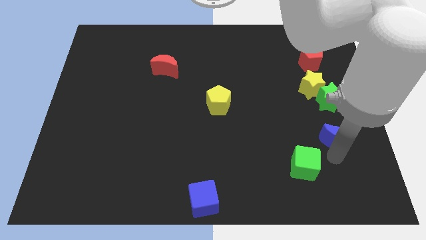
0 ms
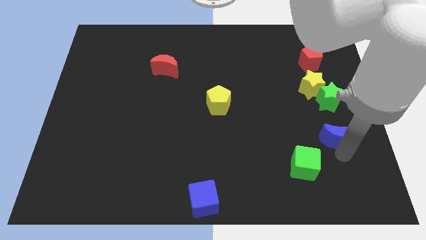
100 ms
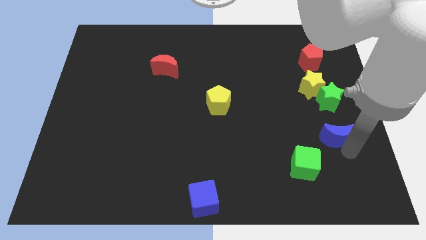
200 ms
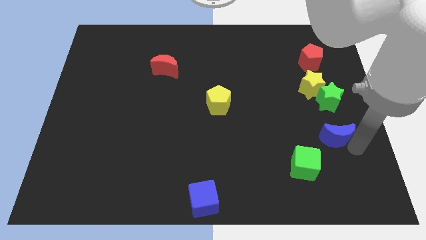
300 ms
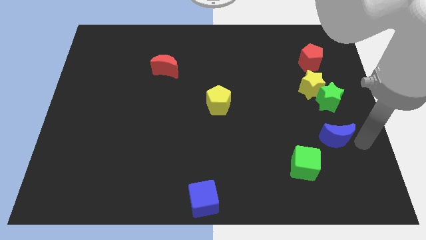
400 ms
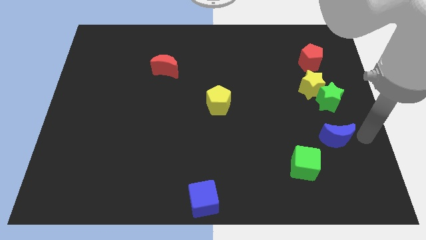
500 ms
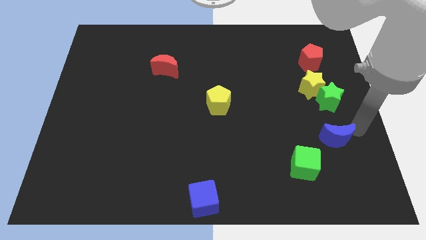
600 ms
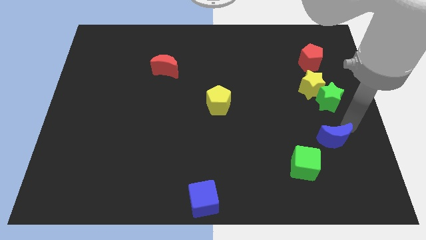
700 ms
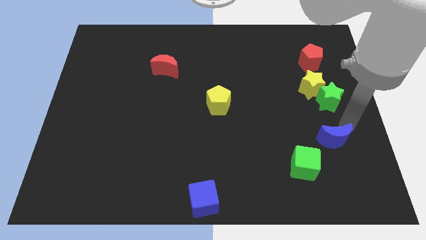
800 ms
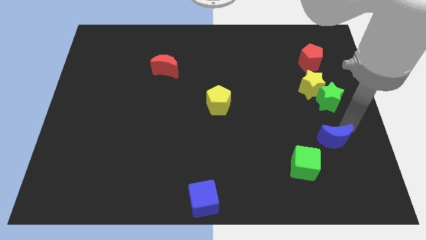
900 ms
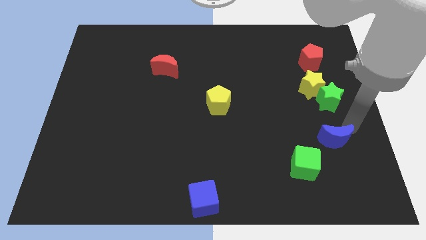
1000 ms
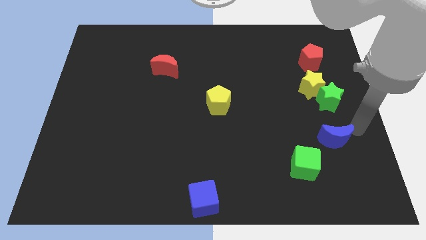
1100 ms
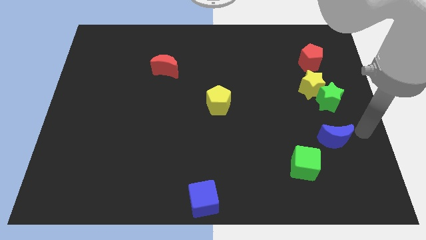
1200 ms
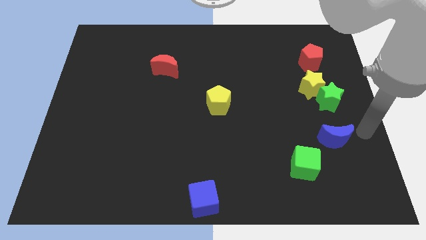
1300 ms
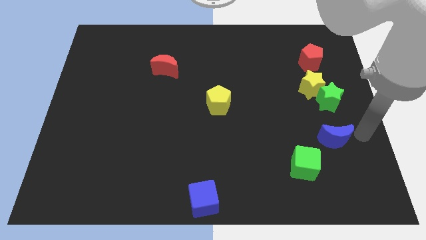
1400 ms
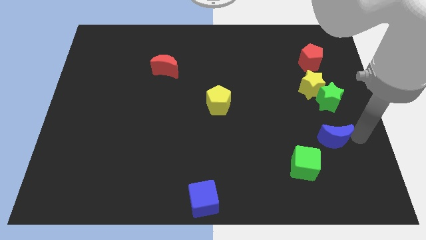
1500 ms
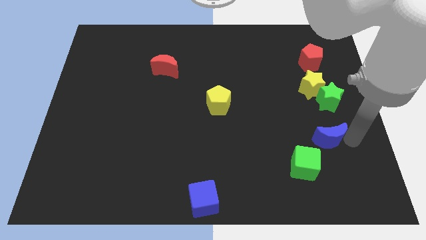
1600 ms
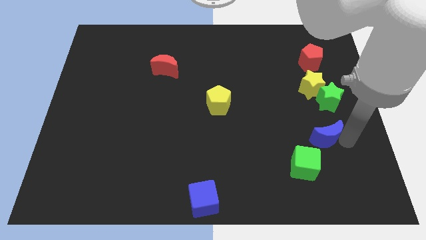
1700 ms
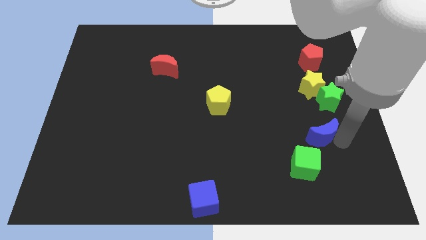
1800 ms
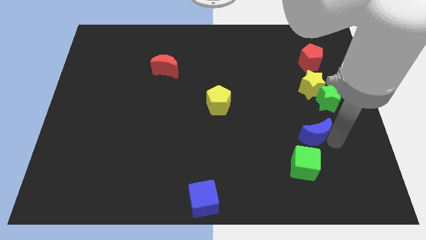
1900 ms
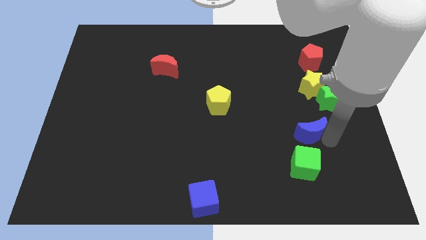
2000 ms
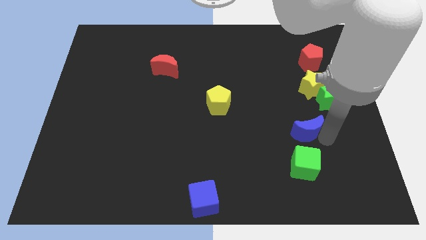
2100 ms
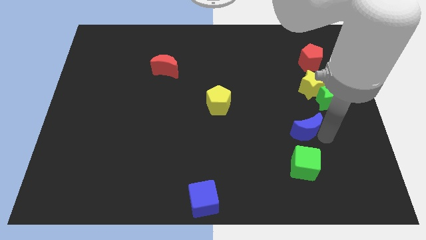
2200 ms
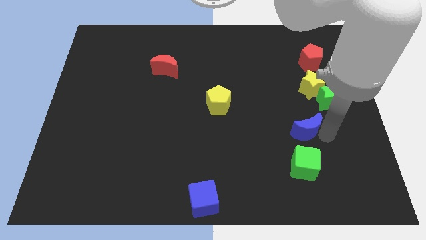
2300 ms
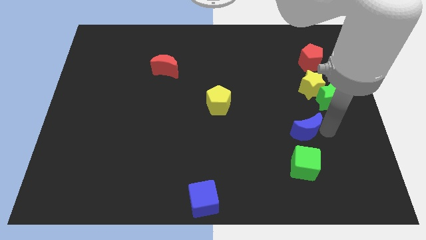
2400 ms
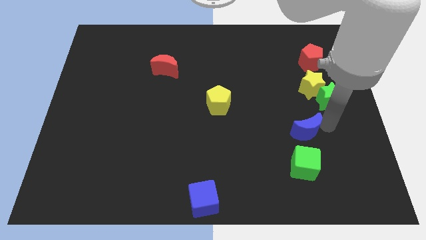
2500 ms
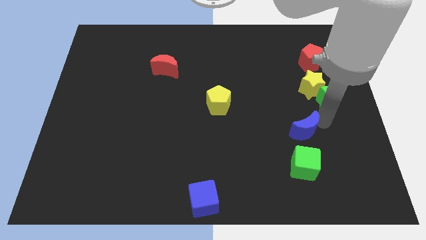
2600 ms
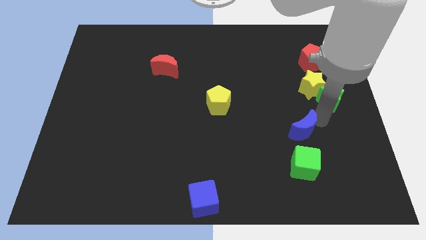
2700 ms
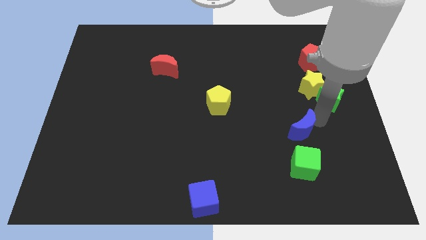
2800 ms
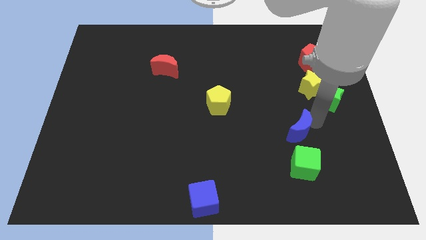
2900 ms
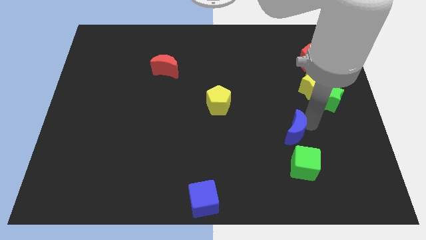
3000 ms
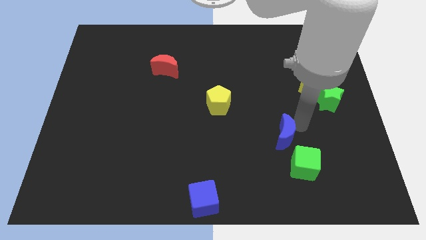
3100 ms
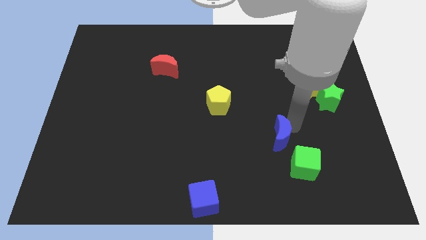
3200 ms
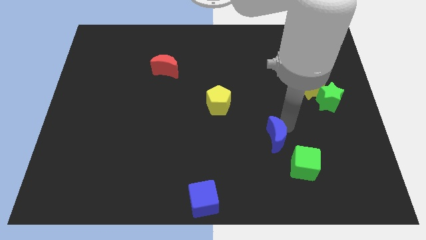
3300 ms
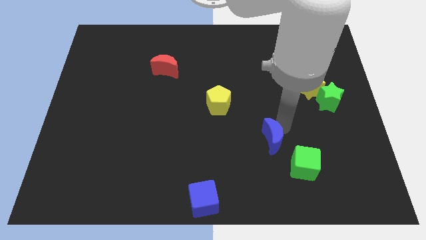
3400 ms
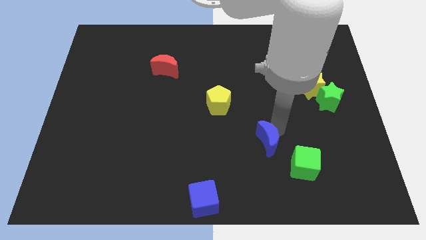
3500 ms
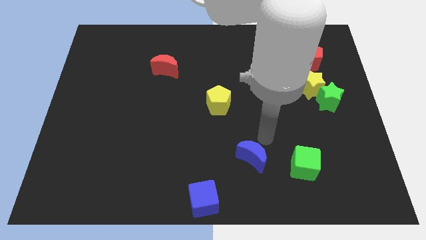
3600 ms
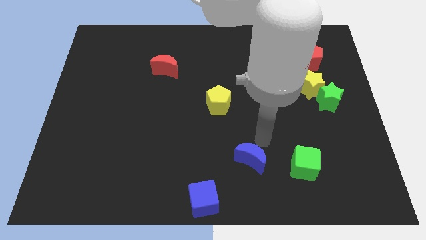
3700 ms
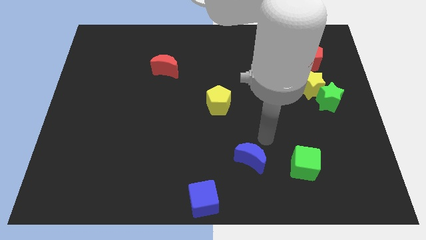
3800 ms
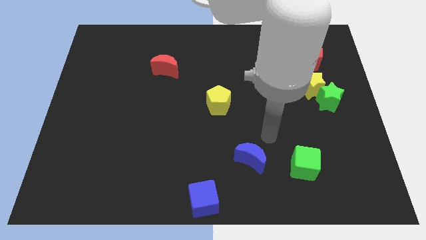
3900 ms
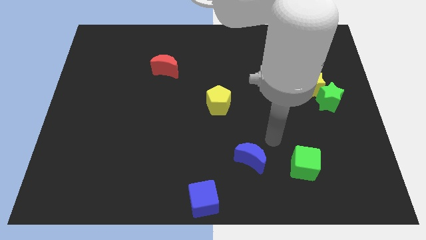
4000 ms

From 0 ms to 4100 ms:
place blue moon to the left of green cube

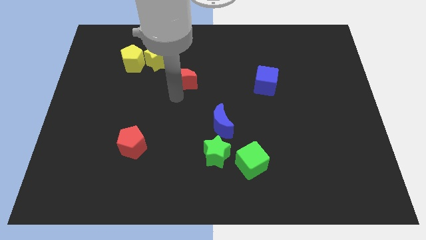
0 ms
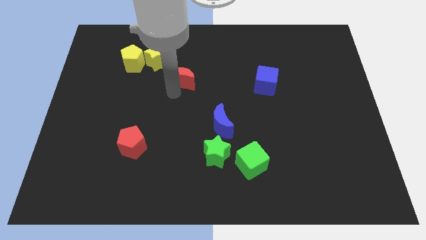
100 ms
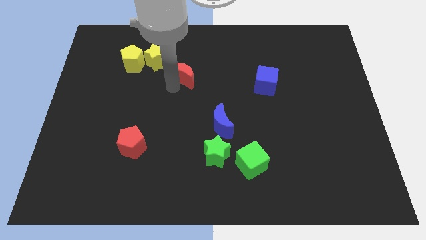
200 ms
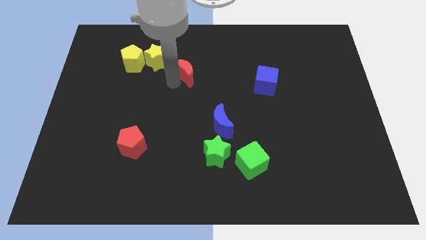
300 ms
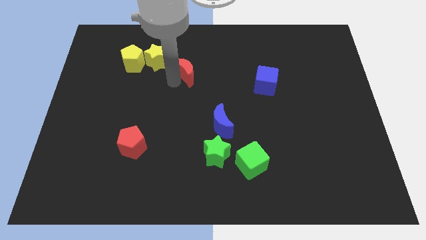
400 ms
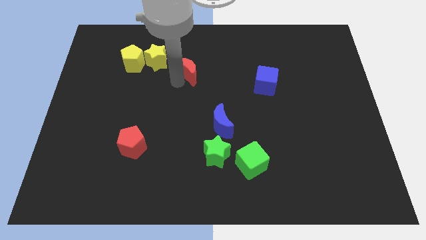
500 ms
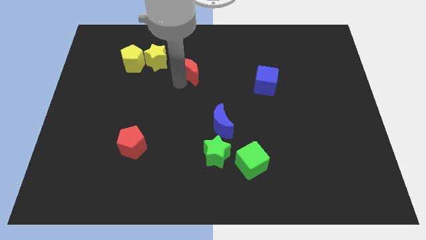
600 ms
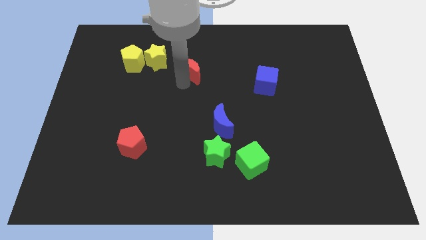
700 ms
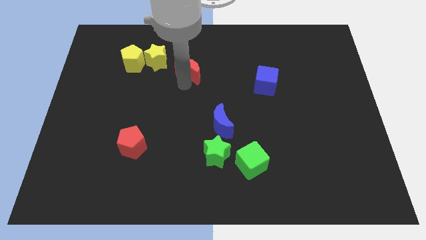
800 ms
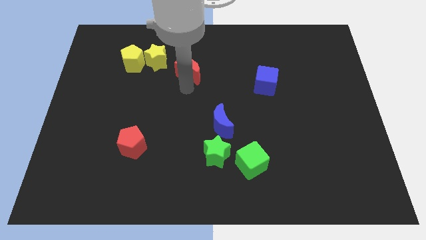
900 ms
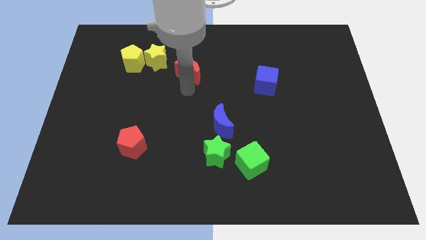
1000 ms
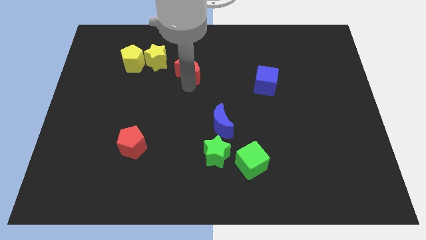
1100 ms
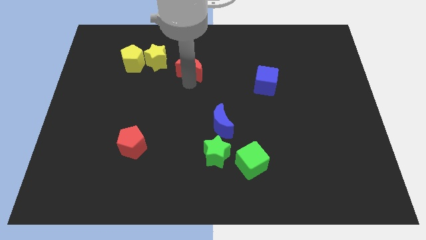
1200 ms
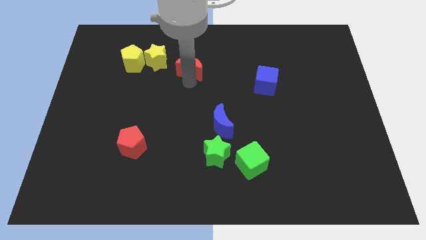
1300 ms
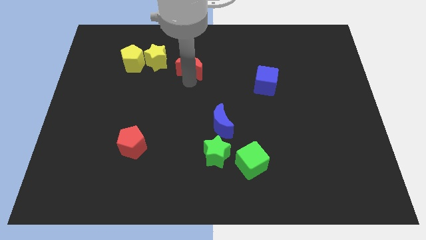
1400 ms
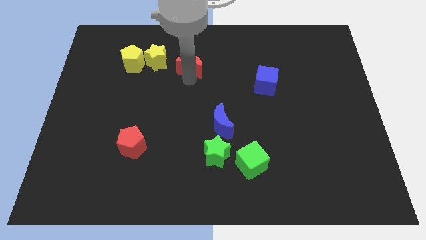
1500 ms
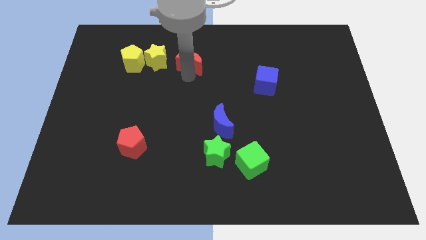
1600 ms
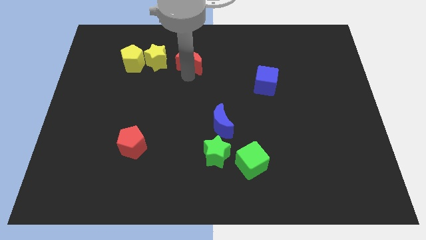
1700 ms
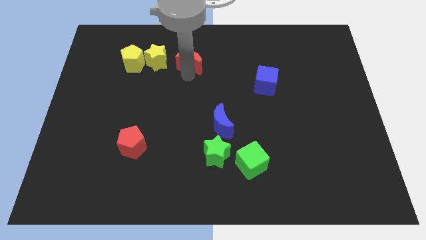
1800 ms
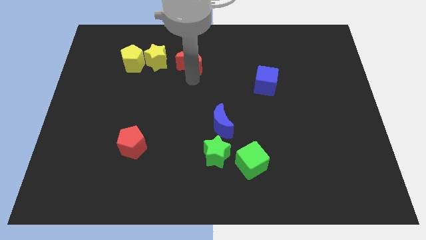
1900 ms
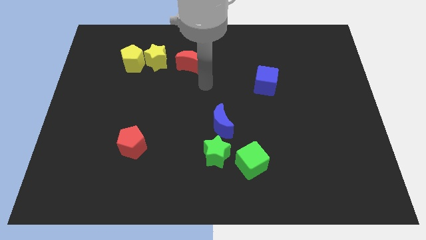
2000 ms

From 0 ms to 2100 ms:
push the red moon right to the yellow star

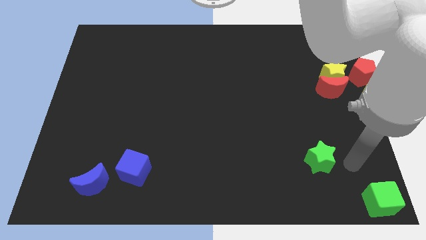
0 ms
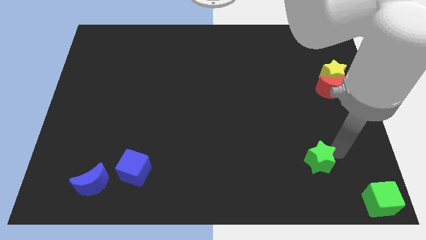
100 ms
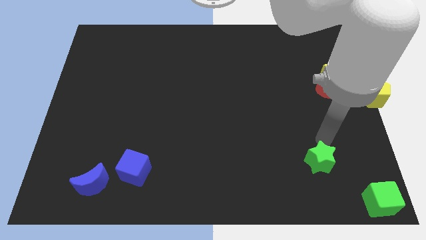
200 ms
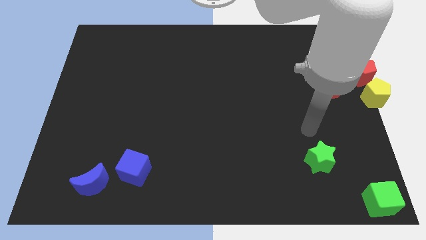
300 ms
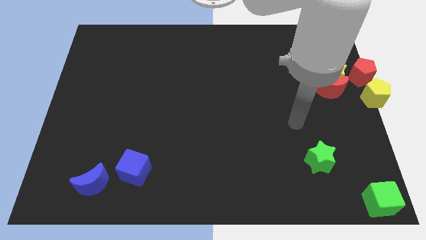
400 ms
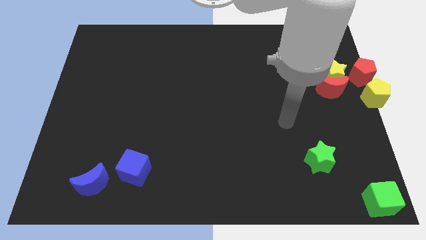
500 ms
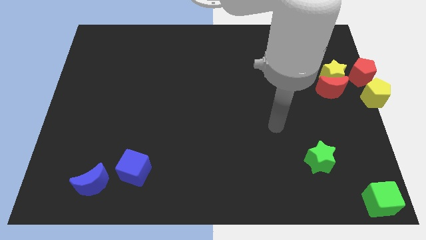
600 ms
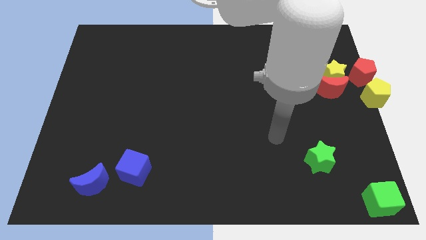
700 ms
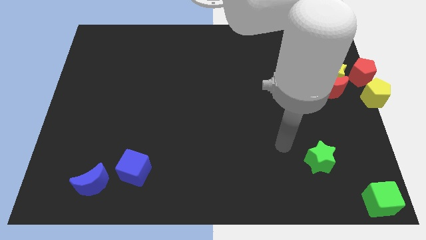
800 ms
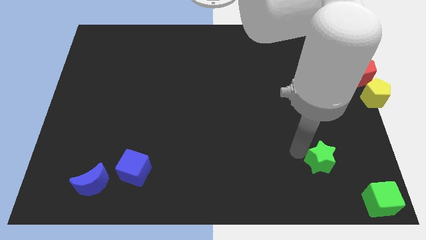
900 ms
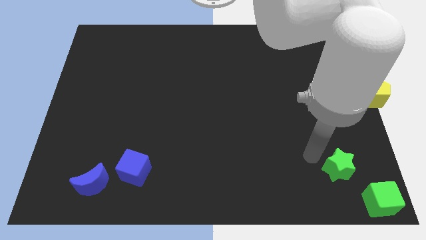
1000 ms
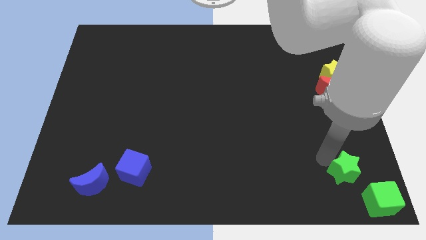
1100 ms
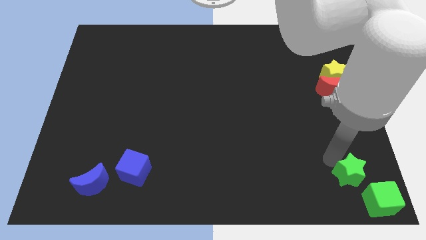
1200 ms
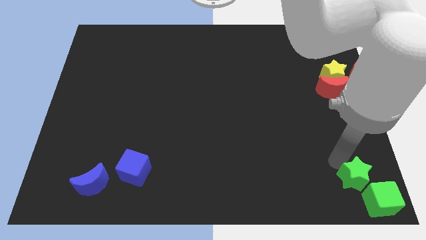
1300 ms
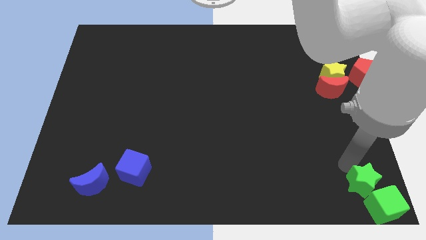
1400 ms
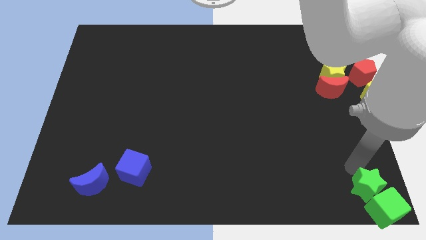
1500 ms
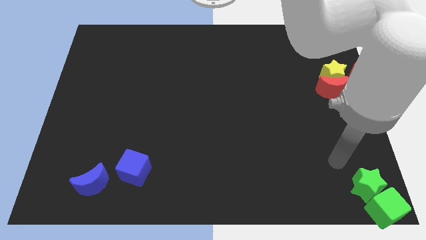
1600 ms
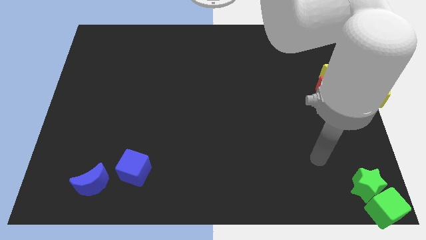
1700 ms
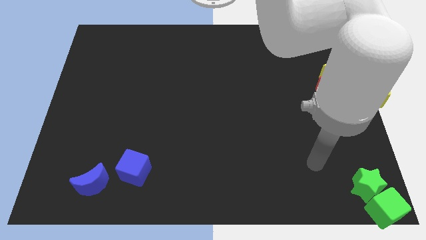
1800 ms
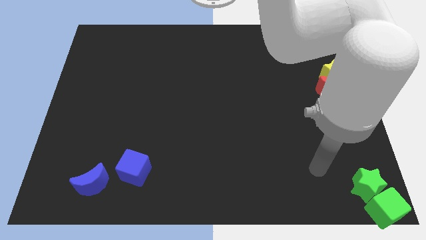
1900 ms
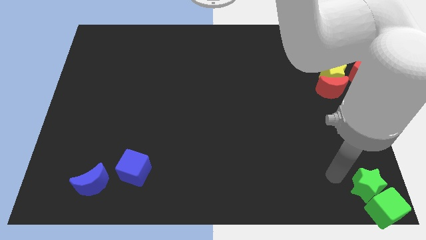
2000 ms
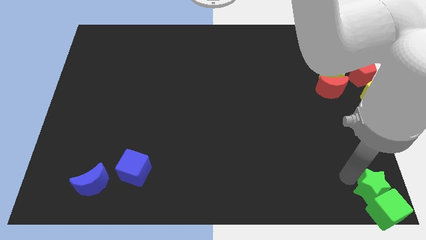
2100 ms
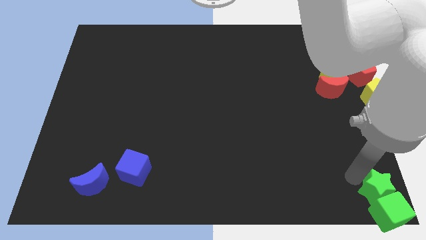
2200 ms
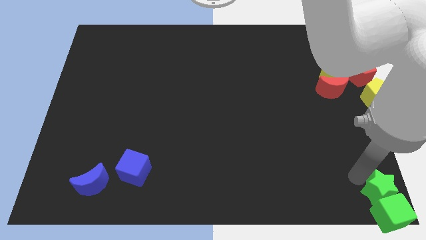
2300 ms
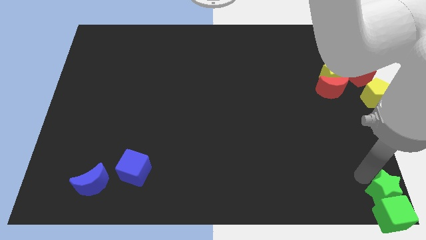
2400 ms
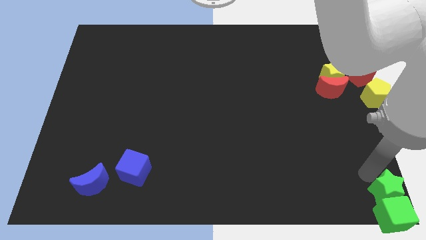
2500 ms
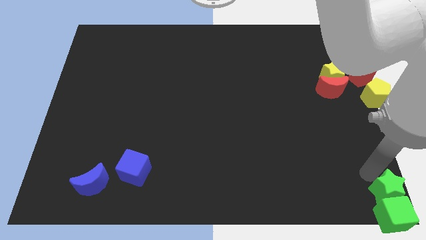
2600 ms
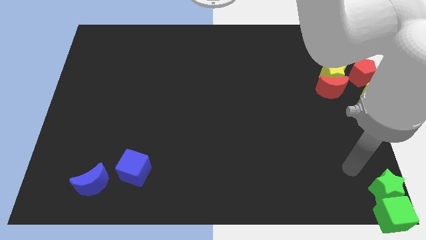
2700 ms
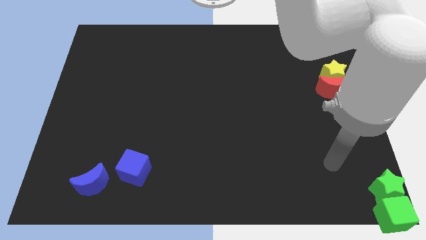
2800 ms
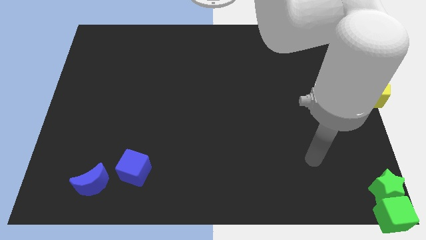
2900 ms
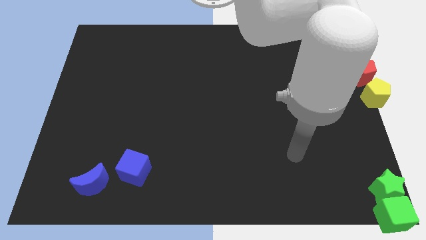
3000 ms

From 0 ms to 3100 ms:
push green star along with green cube to the bottom right corner
